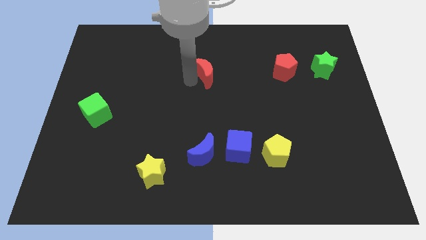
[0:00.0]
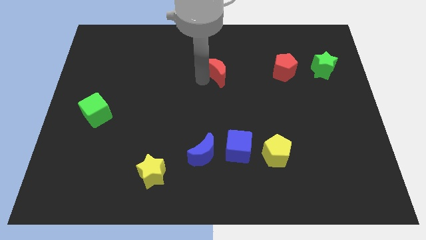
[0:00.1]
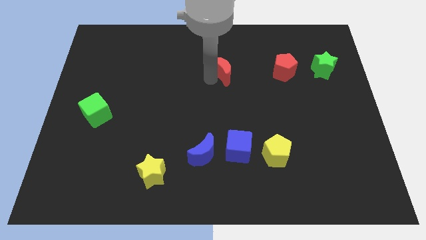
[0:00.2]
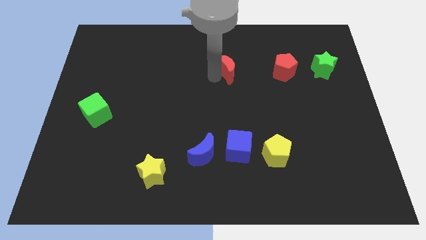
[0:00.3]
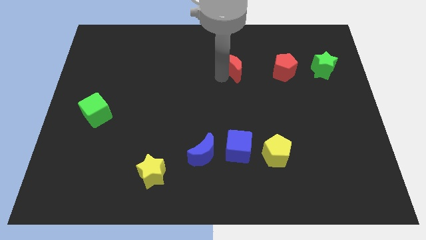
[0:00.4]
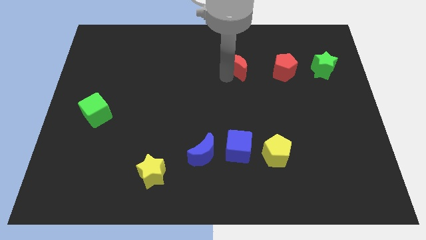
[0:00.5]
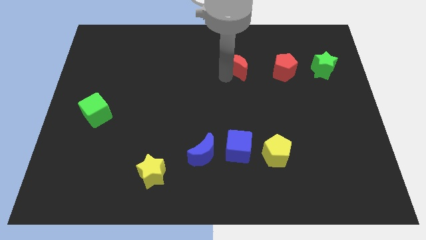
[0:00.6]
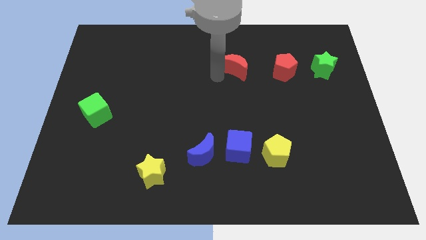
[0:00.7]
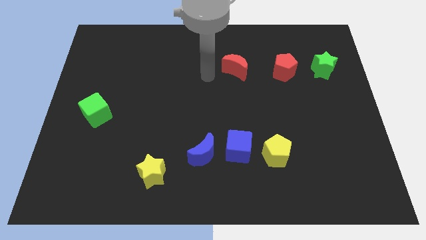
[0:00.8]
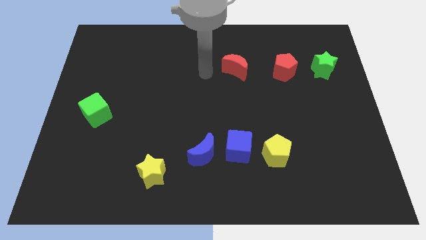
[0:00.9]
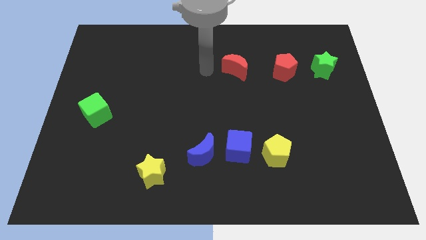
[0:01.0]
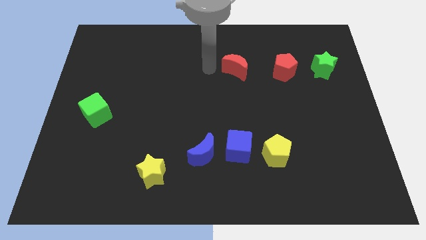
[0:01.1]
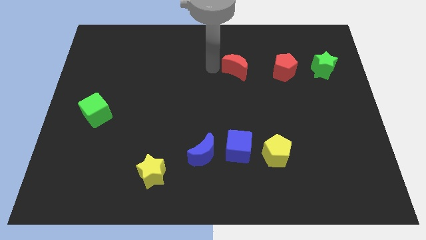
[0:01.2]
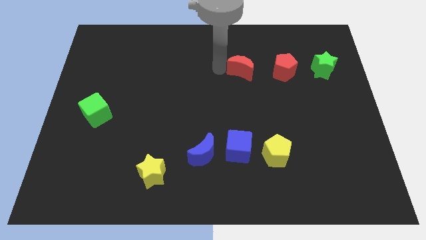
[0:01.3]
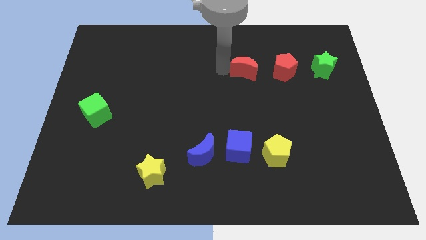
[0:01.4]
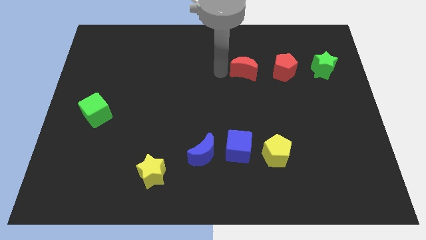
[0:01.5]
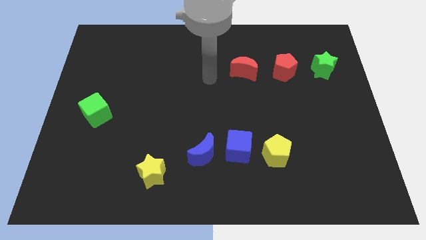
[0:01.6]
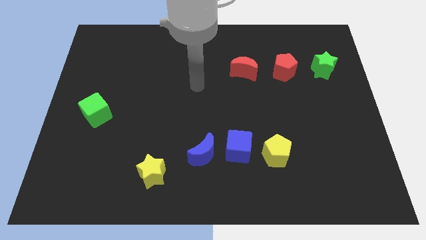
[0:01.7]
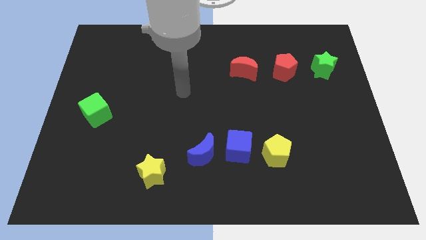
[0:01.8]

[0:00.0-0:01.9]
place the red moon left to the red pentagon

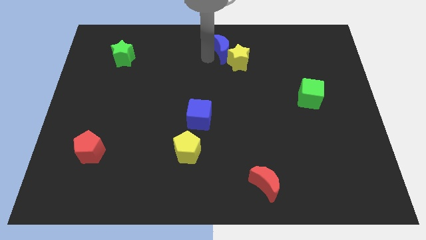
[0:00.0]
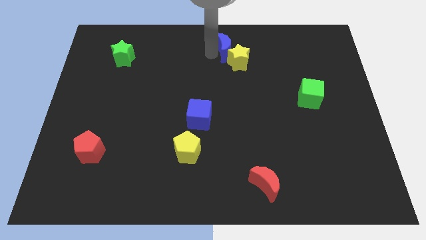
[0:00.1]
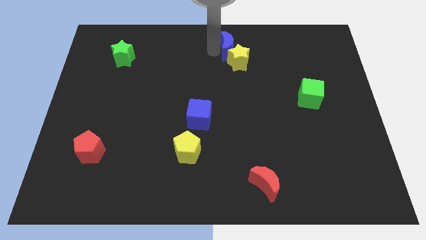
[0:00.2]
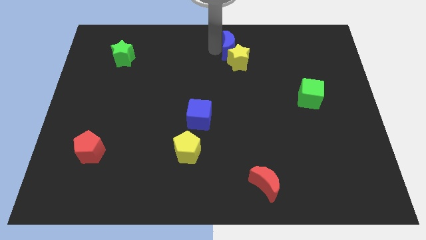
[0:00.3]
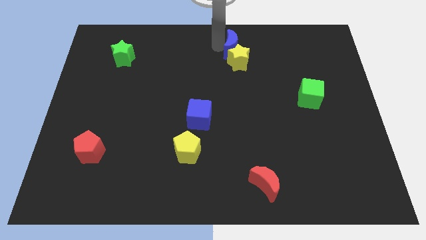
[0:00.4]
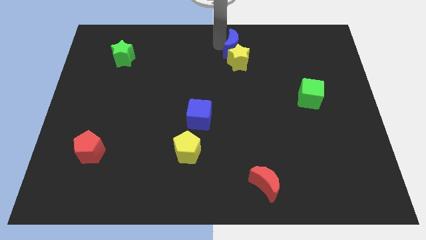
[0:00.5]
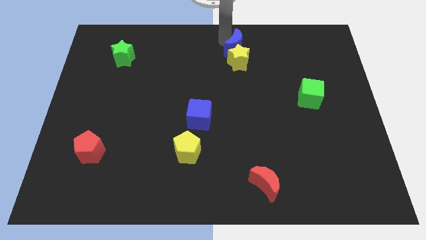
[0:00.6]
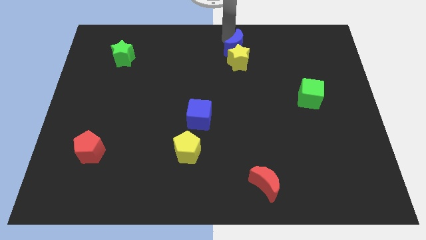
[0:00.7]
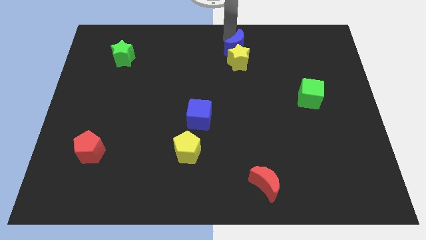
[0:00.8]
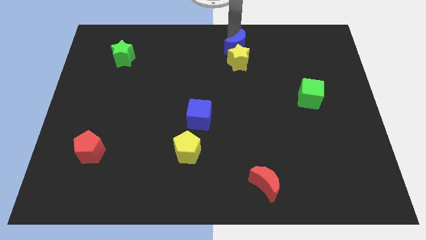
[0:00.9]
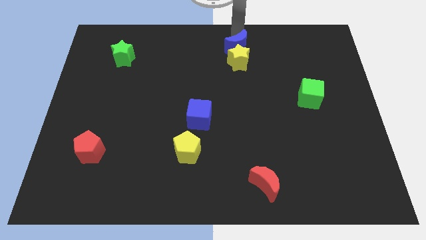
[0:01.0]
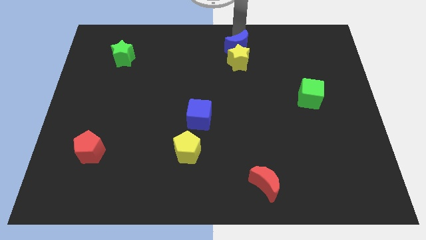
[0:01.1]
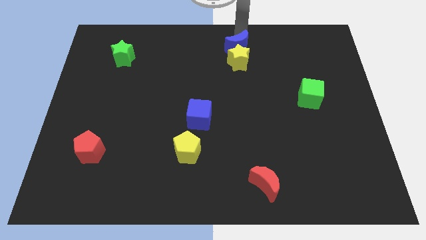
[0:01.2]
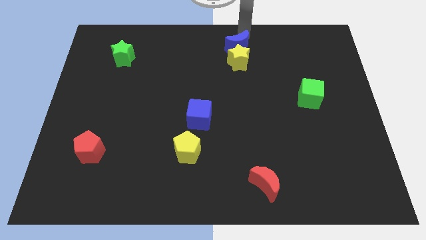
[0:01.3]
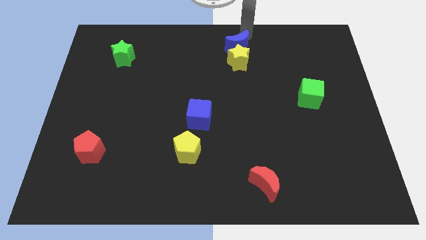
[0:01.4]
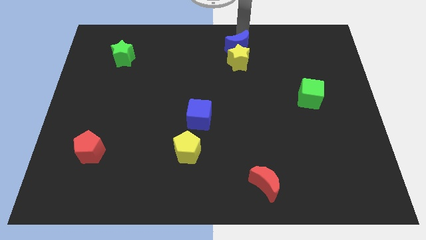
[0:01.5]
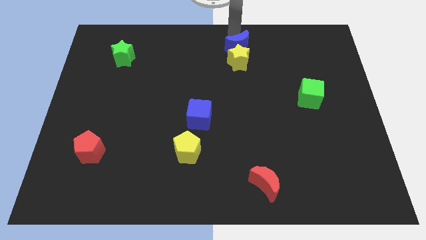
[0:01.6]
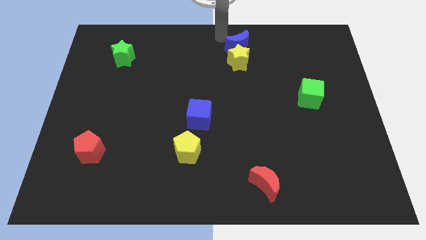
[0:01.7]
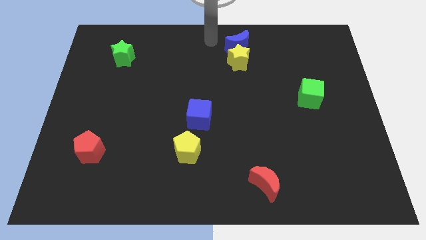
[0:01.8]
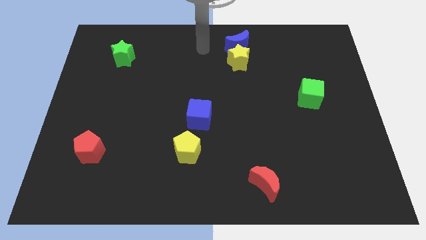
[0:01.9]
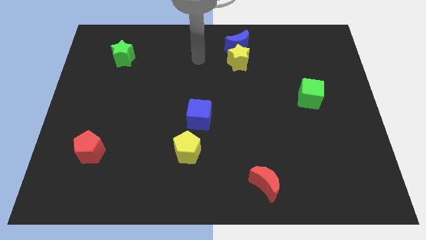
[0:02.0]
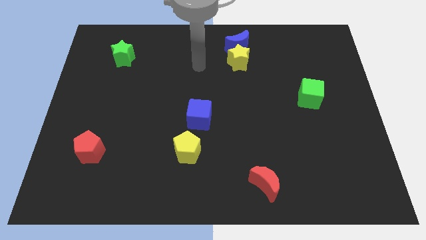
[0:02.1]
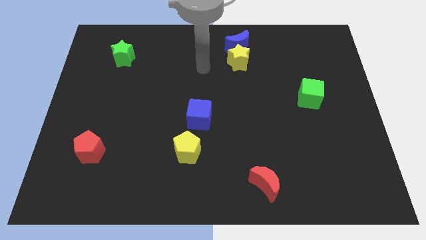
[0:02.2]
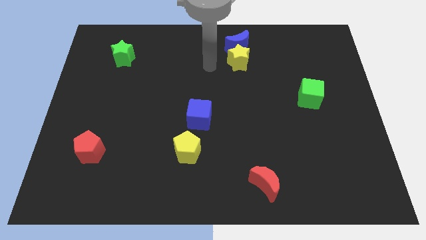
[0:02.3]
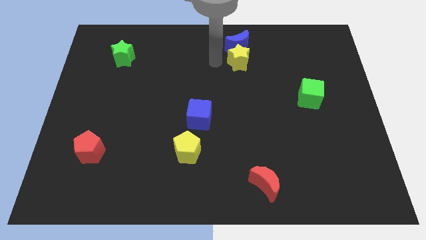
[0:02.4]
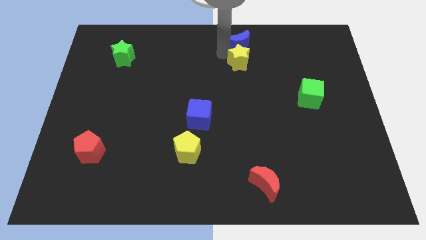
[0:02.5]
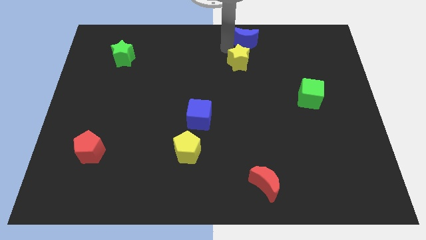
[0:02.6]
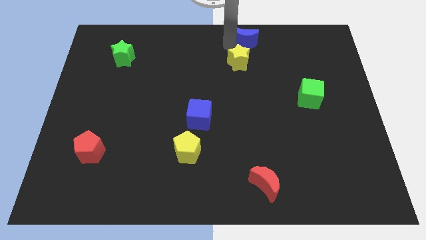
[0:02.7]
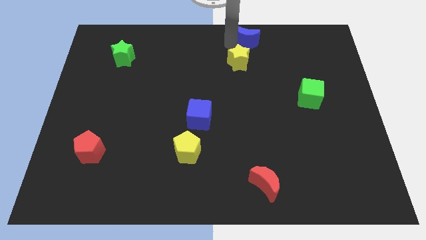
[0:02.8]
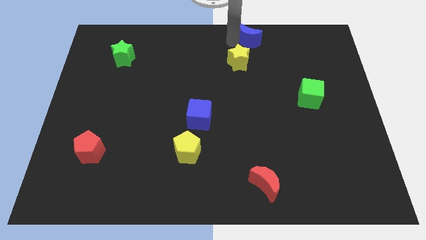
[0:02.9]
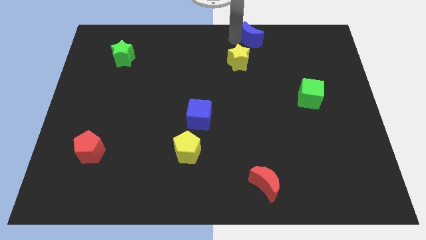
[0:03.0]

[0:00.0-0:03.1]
push the blue moon diagonally above the top right side of the yellow star

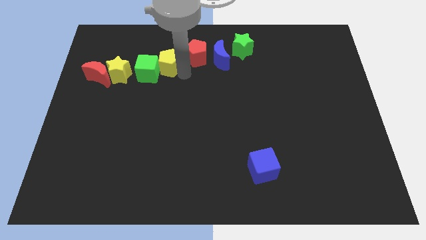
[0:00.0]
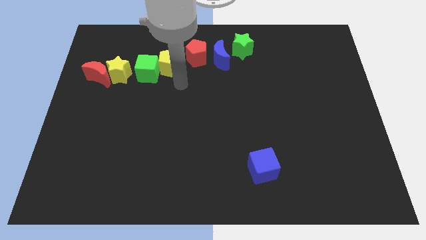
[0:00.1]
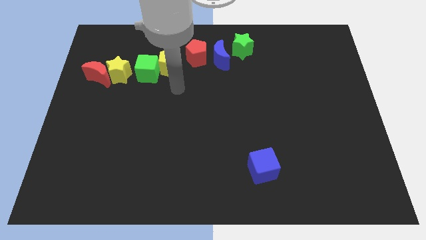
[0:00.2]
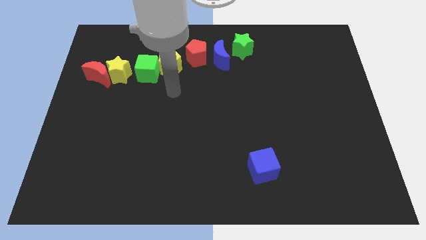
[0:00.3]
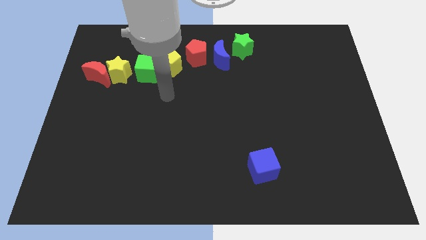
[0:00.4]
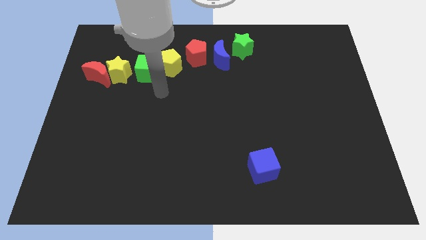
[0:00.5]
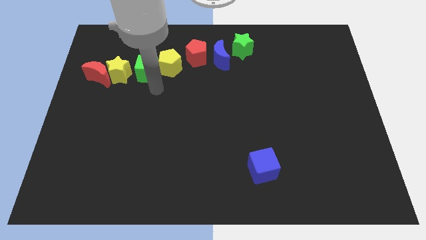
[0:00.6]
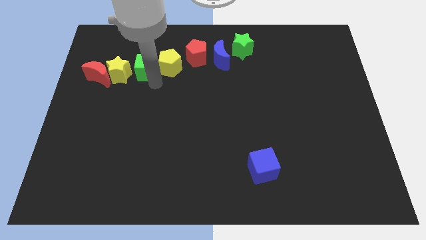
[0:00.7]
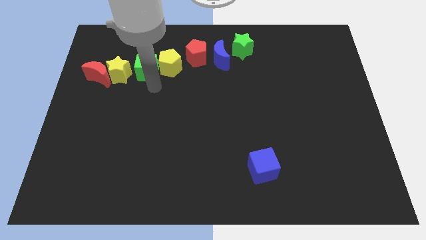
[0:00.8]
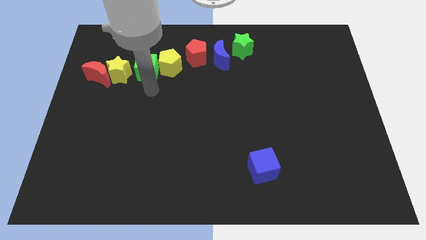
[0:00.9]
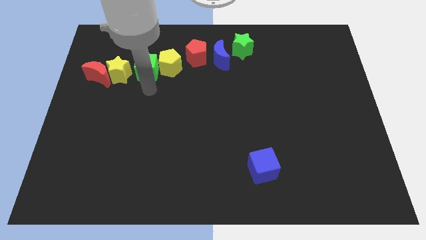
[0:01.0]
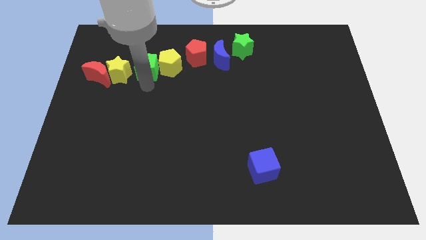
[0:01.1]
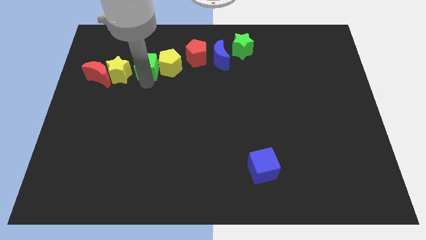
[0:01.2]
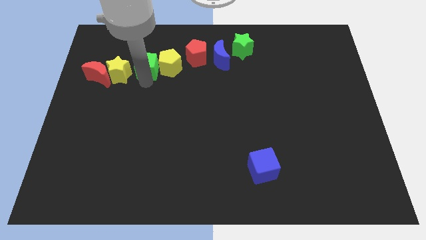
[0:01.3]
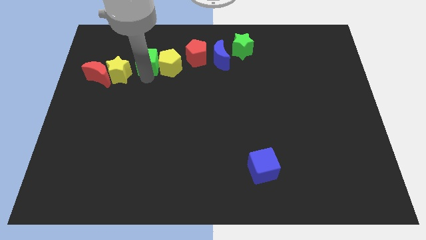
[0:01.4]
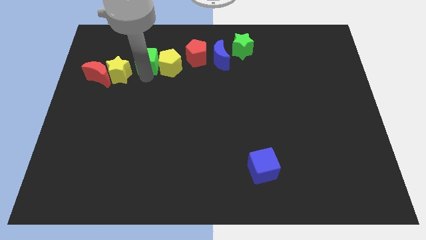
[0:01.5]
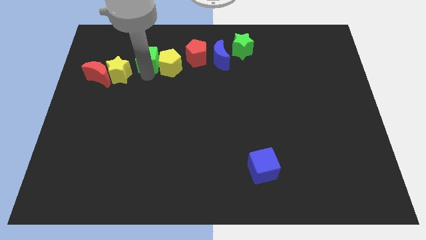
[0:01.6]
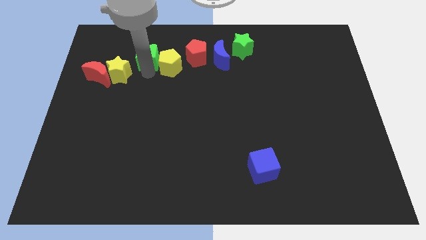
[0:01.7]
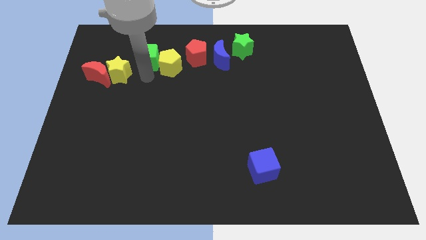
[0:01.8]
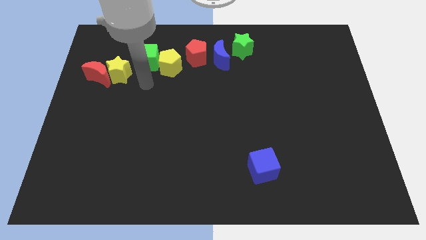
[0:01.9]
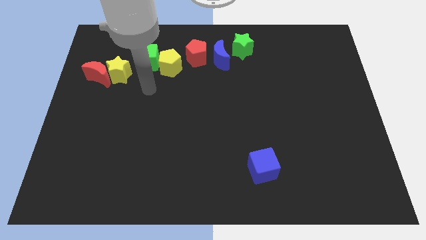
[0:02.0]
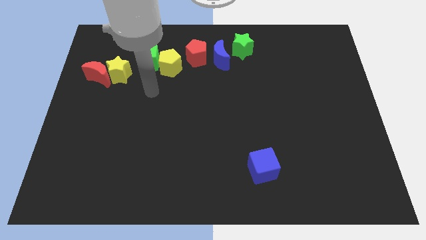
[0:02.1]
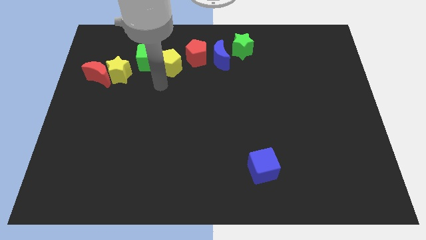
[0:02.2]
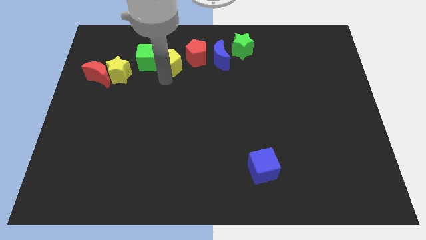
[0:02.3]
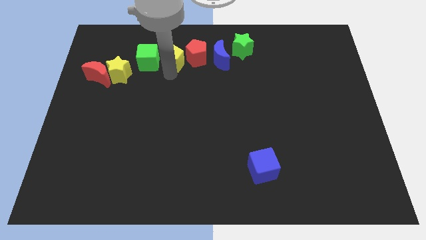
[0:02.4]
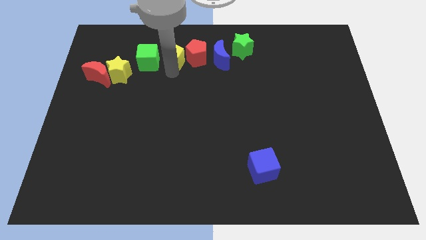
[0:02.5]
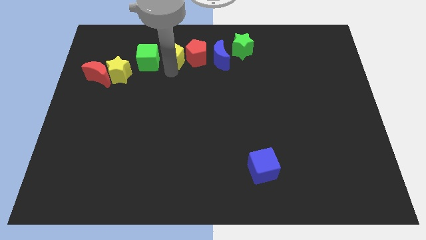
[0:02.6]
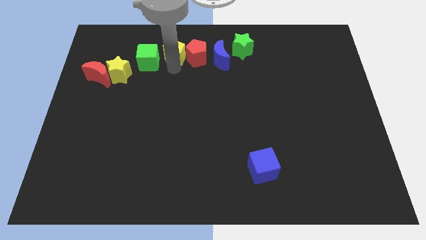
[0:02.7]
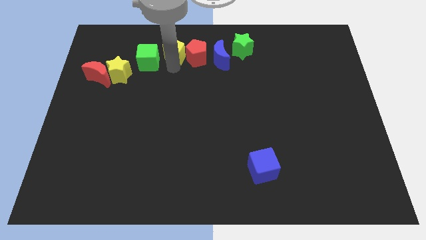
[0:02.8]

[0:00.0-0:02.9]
slightly move the green cube up

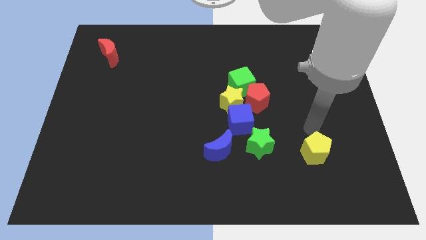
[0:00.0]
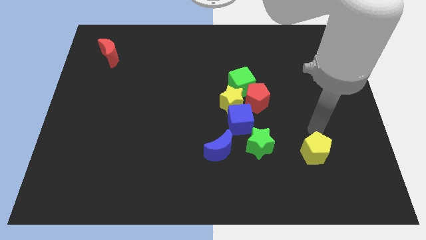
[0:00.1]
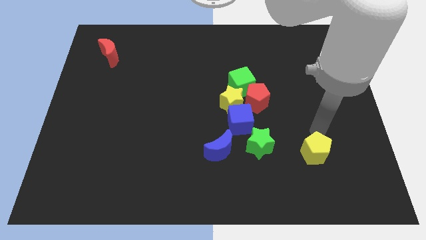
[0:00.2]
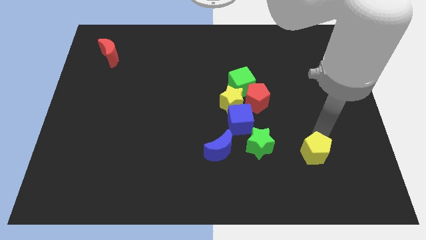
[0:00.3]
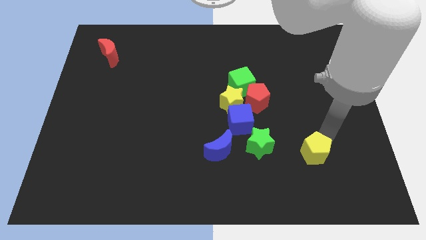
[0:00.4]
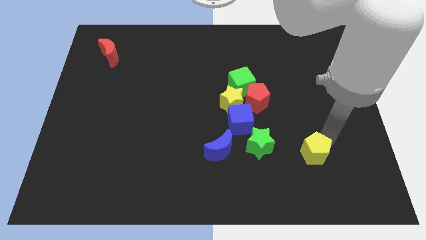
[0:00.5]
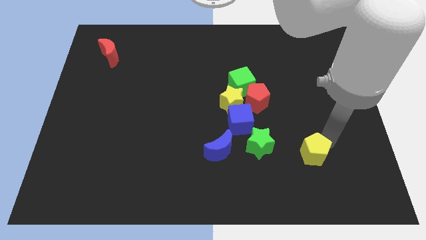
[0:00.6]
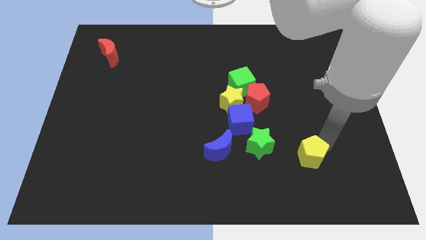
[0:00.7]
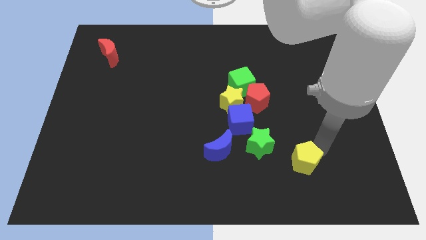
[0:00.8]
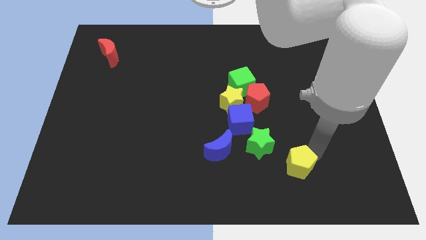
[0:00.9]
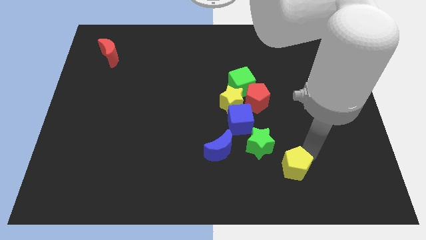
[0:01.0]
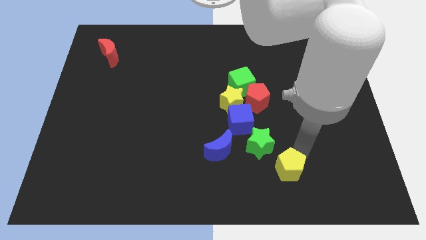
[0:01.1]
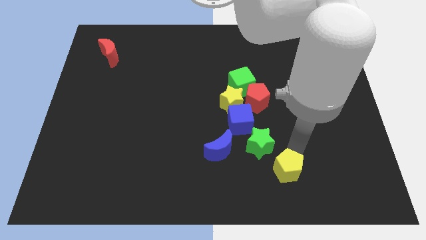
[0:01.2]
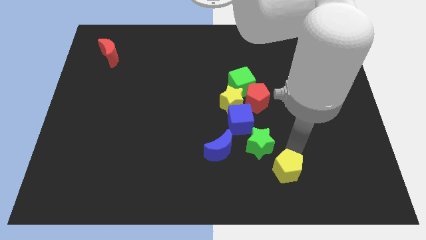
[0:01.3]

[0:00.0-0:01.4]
move the yellow pentagon close to the green star
